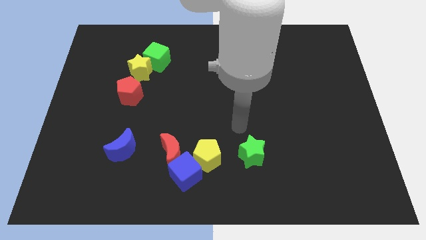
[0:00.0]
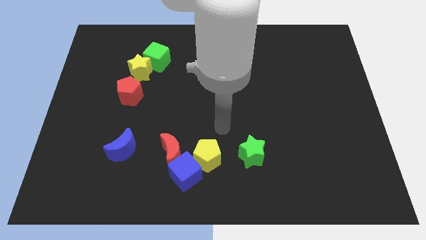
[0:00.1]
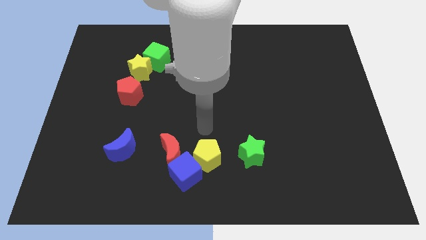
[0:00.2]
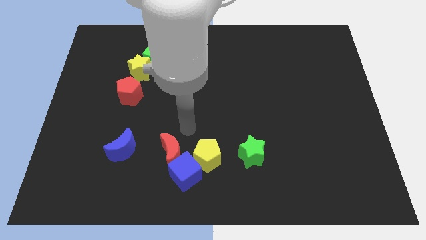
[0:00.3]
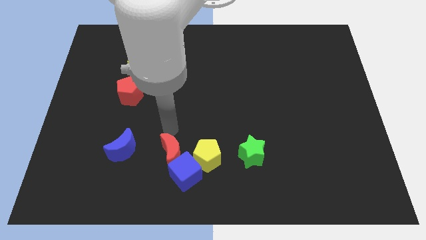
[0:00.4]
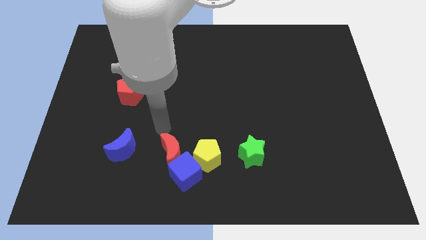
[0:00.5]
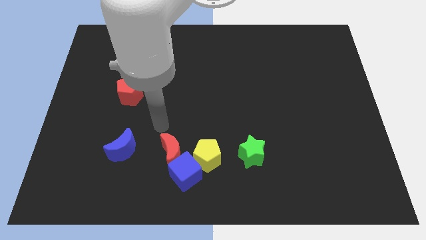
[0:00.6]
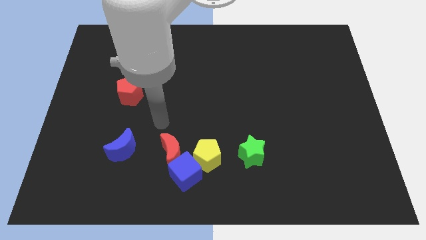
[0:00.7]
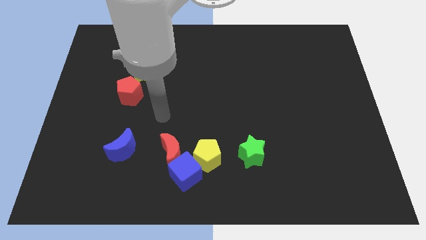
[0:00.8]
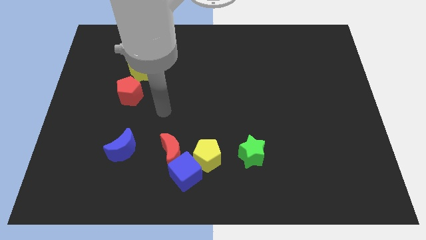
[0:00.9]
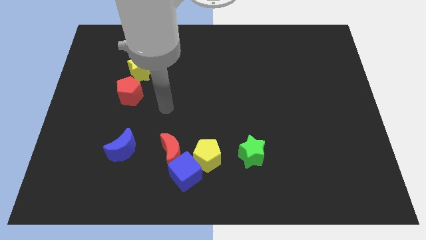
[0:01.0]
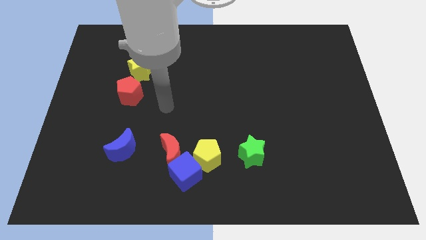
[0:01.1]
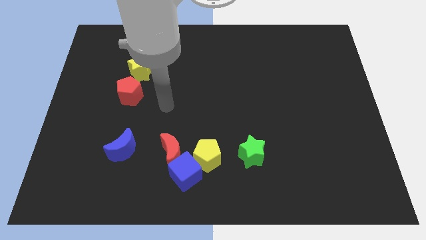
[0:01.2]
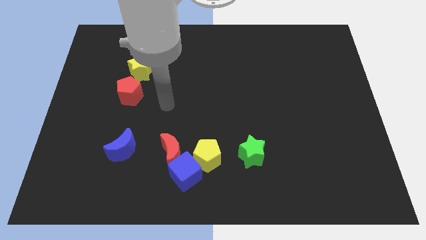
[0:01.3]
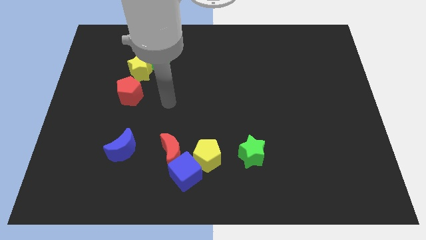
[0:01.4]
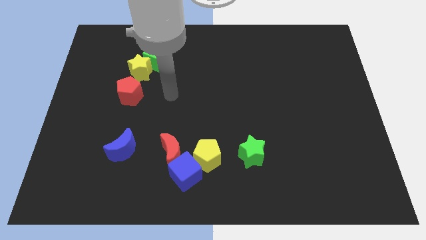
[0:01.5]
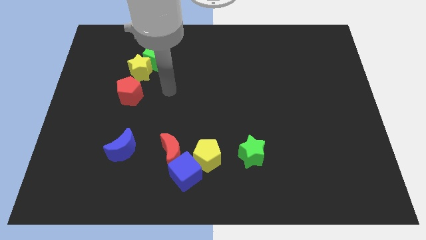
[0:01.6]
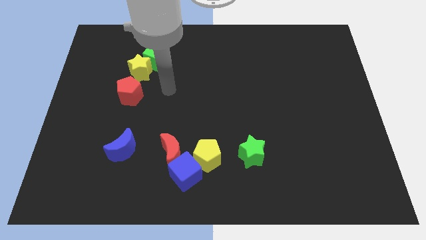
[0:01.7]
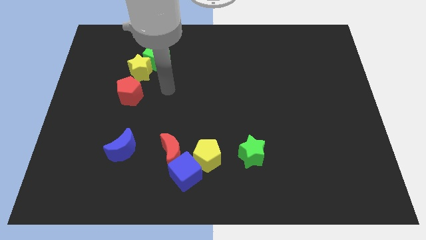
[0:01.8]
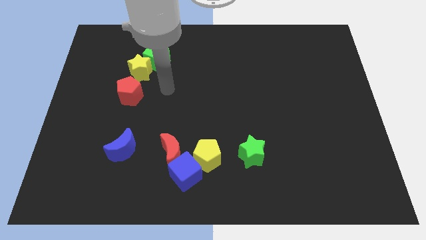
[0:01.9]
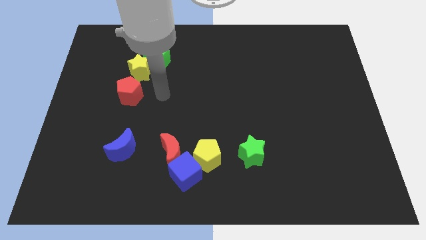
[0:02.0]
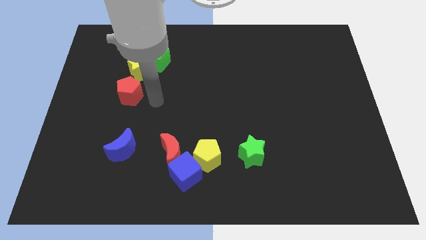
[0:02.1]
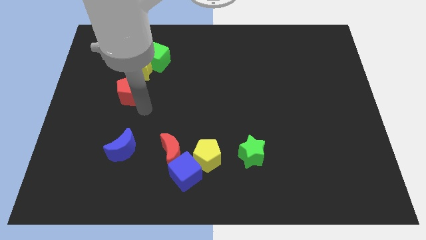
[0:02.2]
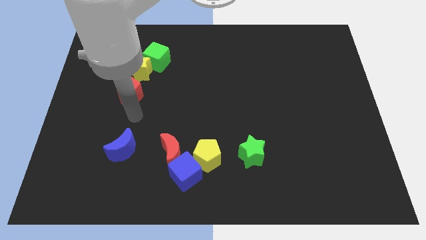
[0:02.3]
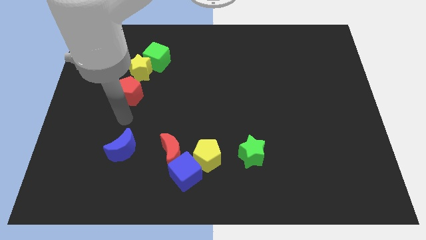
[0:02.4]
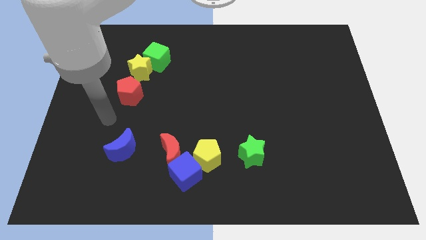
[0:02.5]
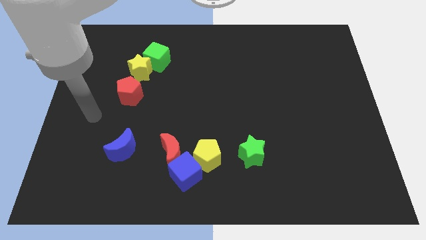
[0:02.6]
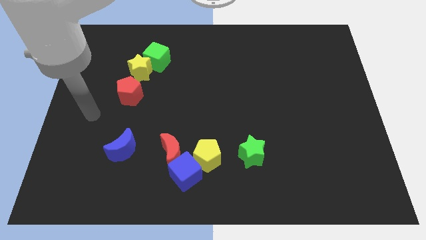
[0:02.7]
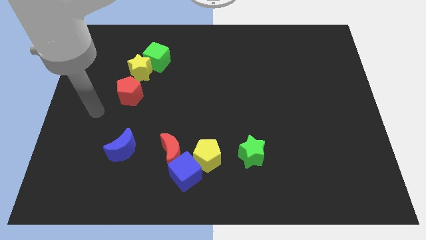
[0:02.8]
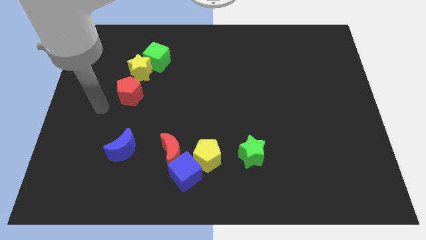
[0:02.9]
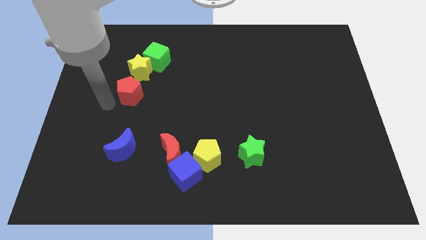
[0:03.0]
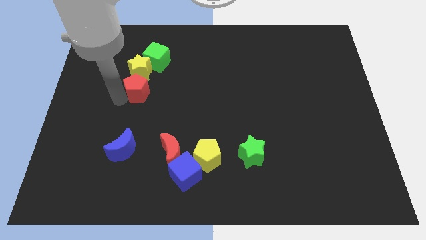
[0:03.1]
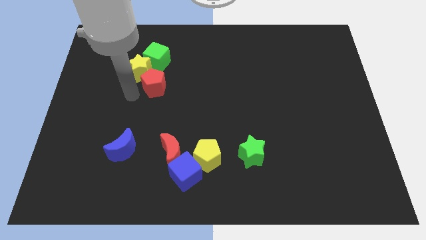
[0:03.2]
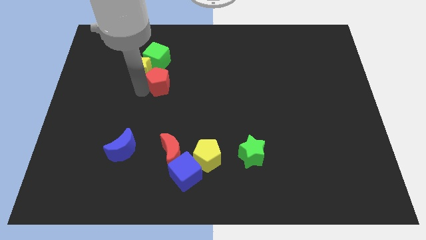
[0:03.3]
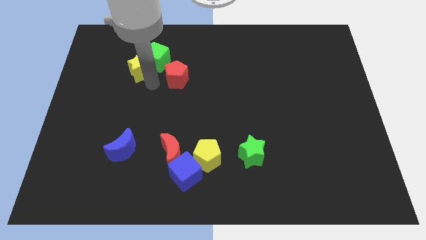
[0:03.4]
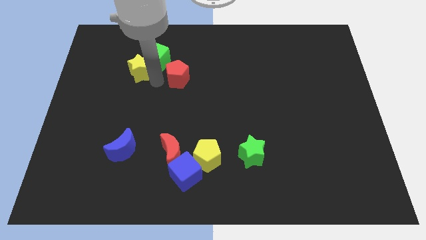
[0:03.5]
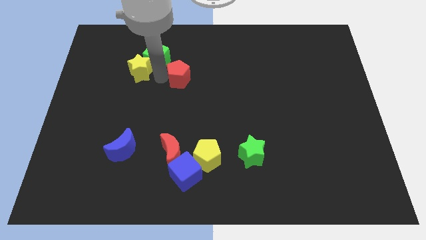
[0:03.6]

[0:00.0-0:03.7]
place the red pentagon diagonally to the bottom right of the green cube

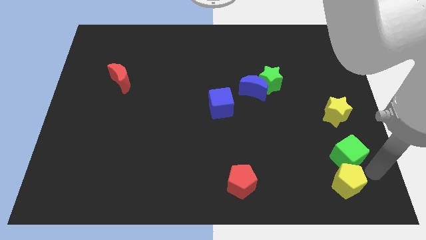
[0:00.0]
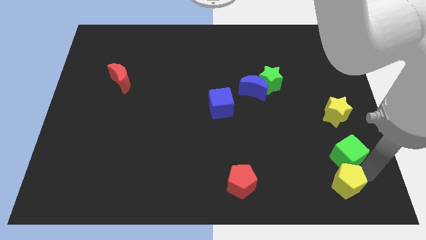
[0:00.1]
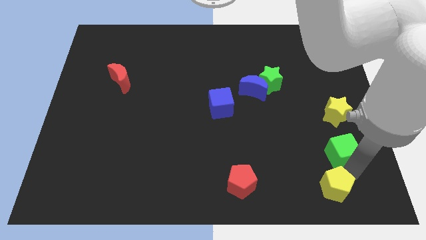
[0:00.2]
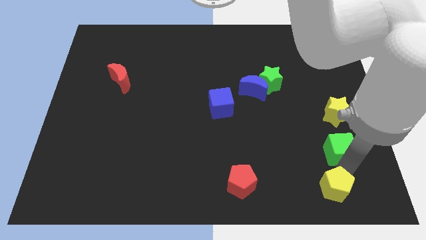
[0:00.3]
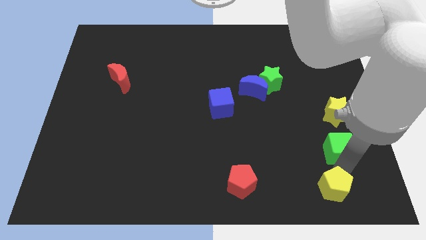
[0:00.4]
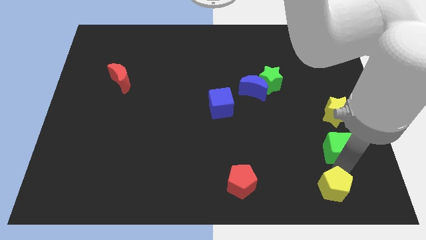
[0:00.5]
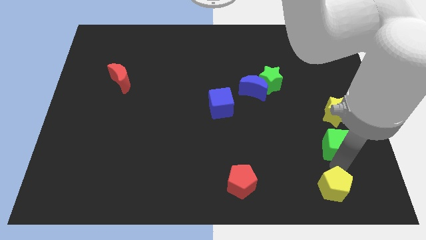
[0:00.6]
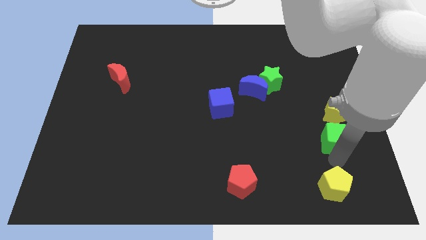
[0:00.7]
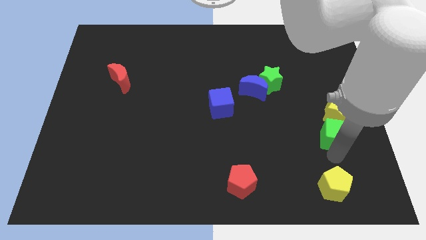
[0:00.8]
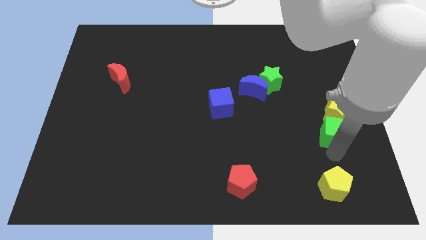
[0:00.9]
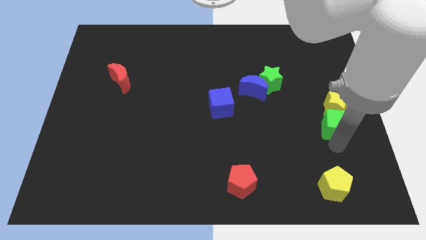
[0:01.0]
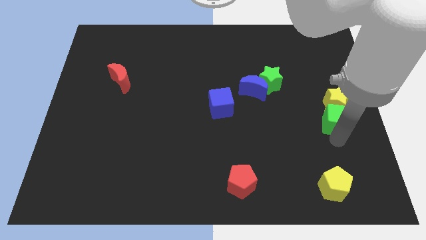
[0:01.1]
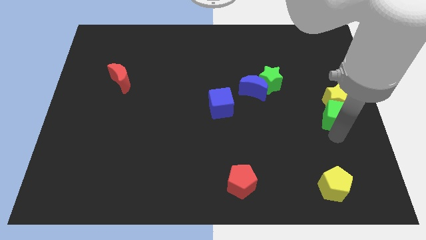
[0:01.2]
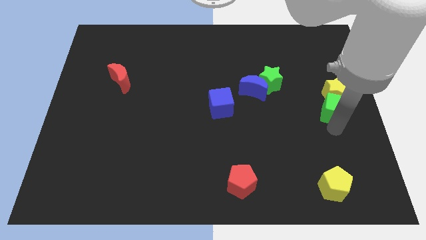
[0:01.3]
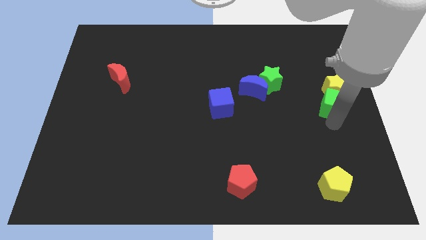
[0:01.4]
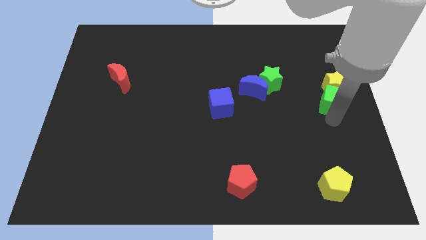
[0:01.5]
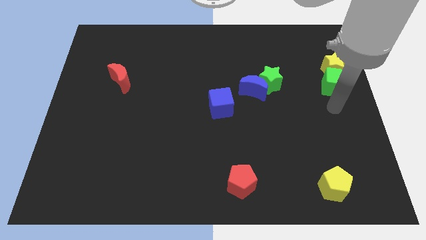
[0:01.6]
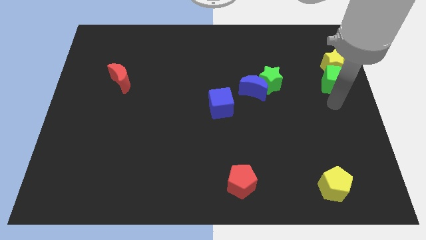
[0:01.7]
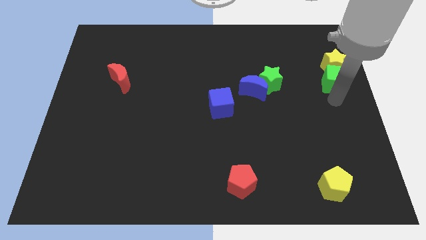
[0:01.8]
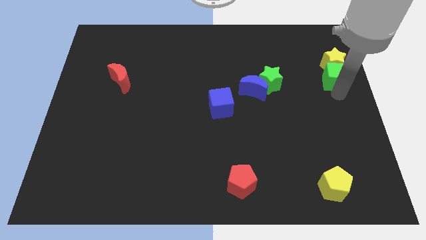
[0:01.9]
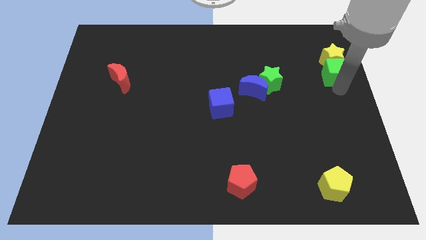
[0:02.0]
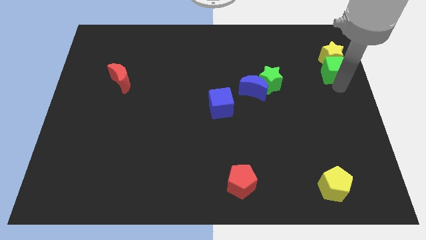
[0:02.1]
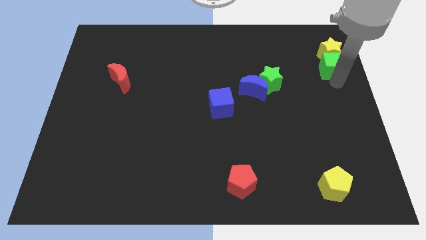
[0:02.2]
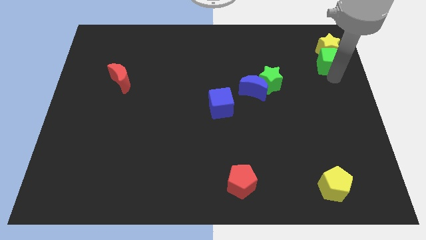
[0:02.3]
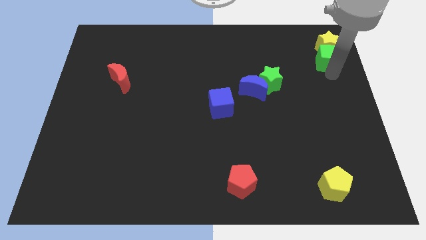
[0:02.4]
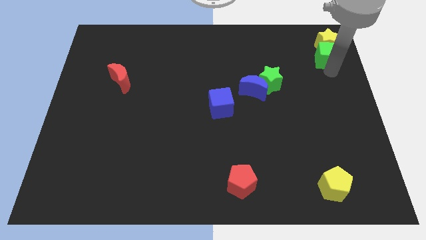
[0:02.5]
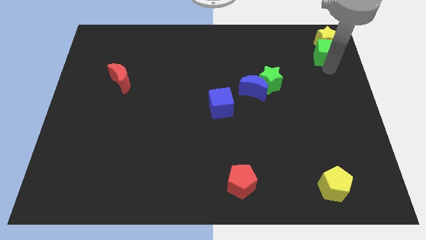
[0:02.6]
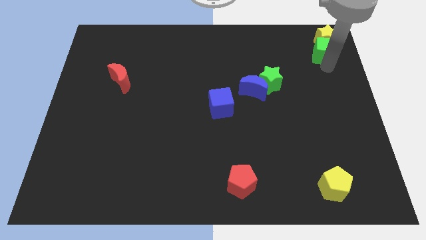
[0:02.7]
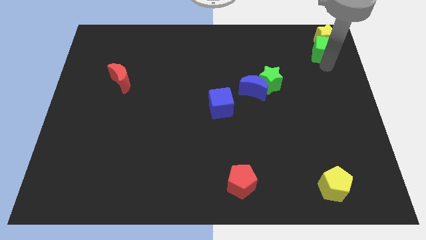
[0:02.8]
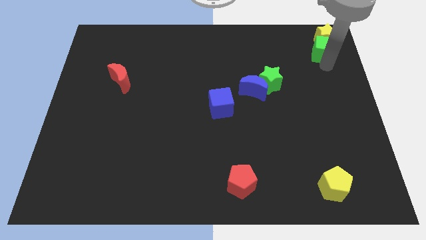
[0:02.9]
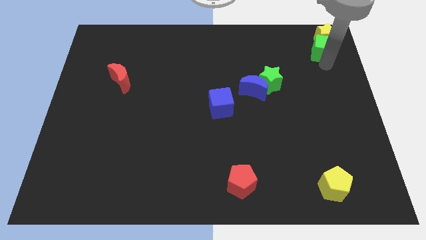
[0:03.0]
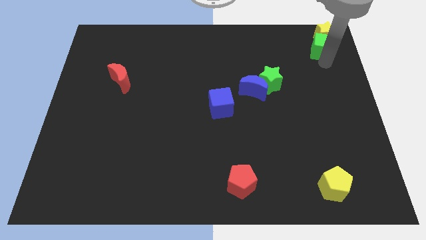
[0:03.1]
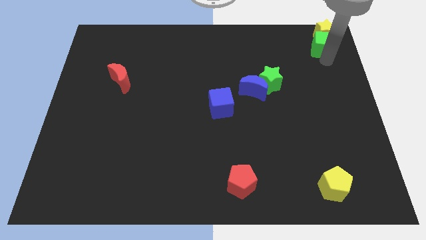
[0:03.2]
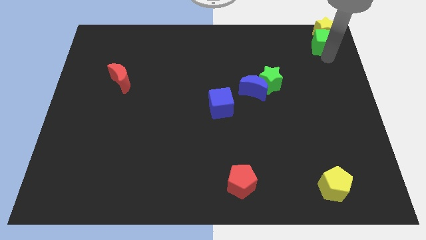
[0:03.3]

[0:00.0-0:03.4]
push the green star along with the yellow star to the top right corner of the board

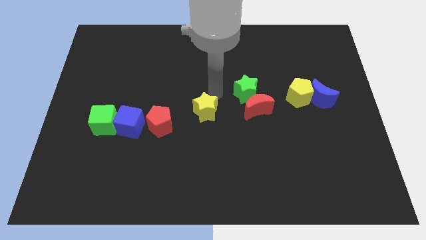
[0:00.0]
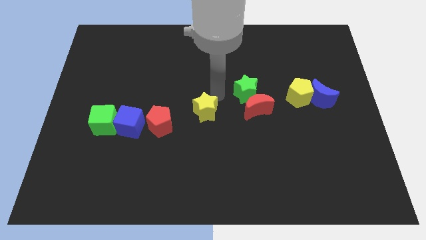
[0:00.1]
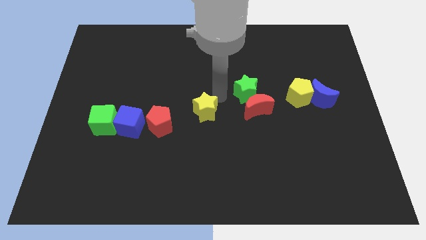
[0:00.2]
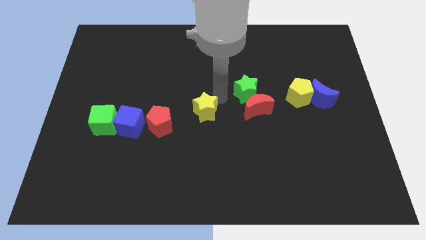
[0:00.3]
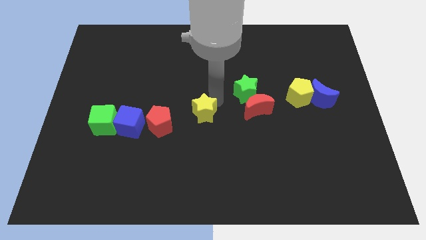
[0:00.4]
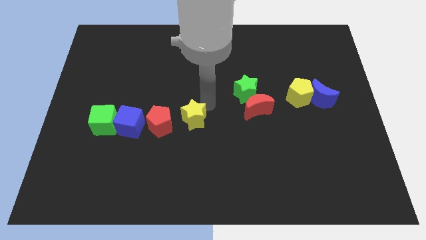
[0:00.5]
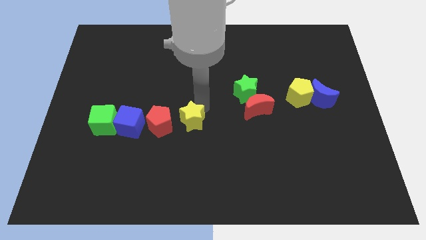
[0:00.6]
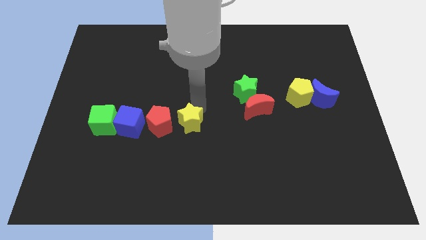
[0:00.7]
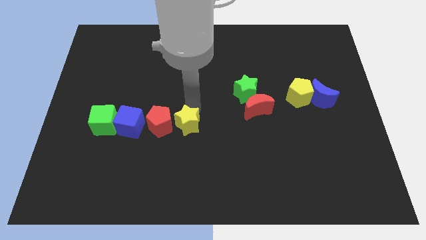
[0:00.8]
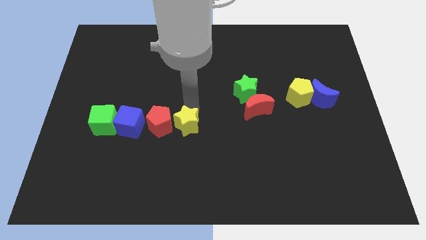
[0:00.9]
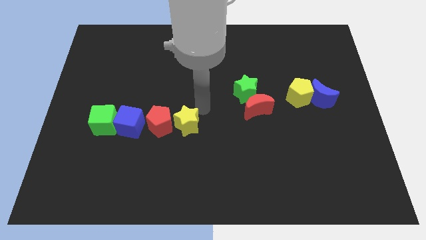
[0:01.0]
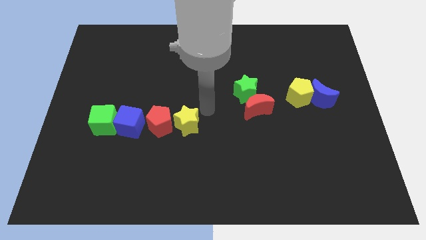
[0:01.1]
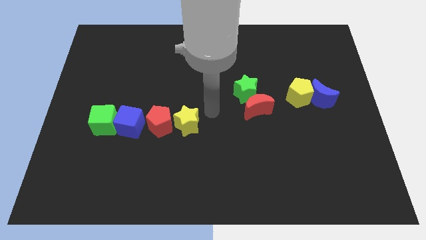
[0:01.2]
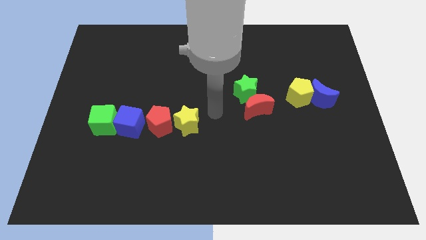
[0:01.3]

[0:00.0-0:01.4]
place the yellow star to the right of the red pentagon

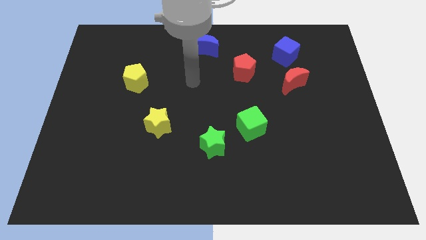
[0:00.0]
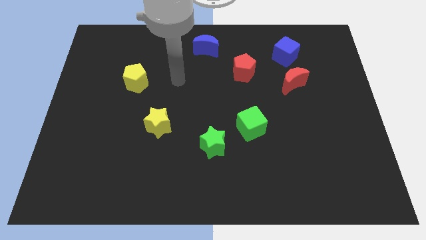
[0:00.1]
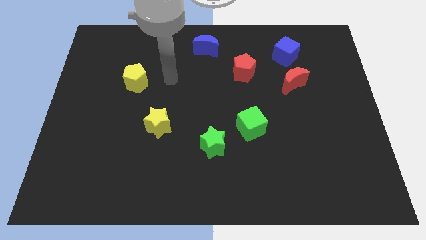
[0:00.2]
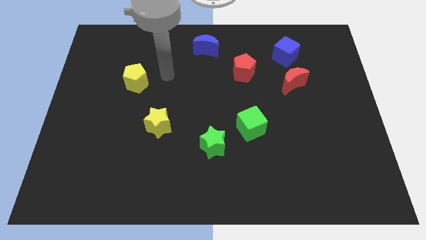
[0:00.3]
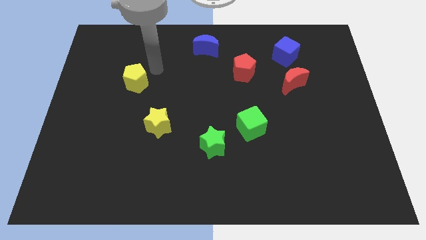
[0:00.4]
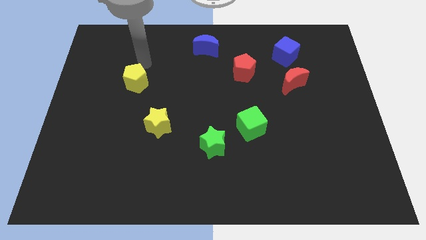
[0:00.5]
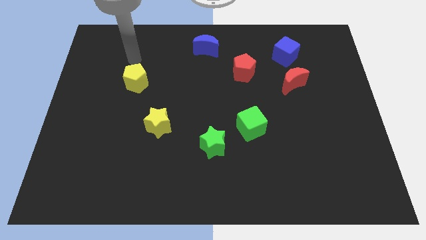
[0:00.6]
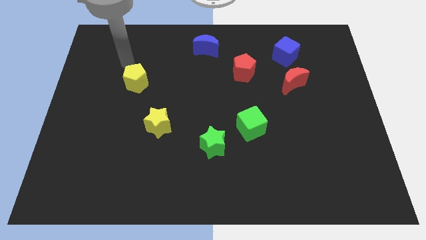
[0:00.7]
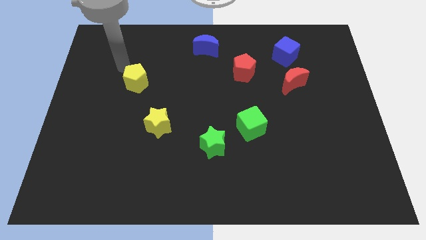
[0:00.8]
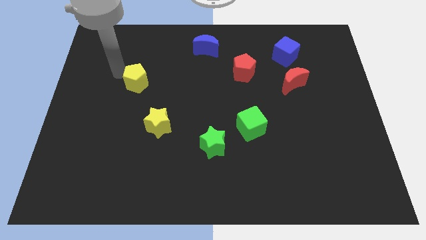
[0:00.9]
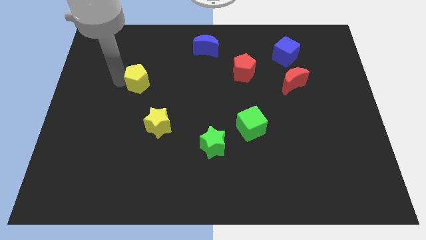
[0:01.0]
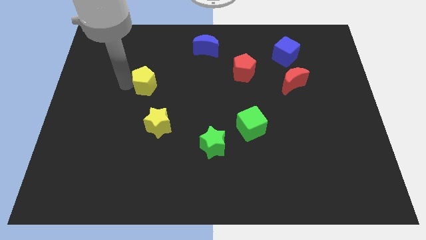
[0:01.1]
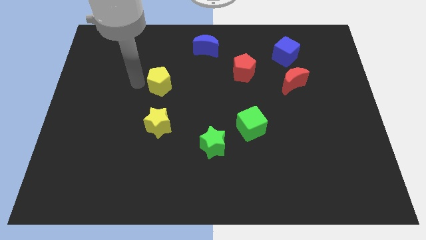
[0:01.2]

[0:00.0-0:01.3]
move the yellow pentagon vertically to the top side of the yellow star
